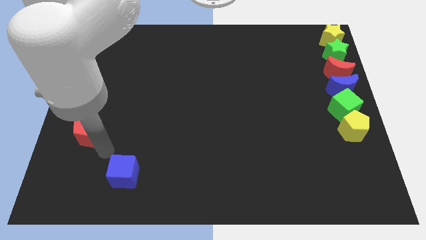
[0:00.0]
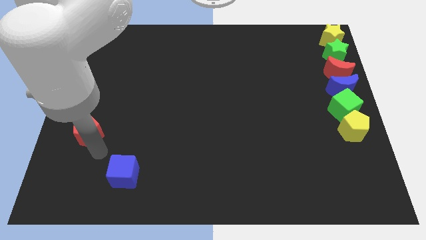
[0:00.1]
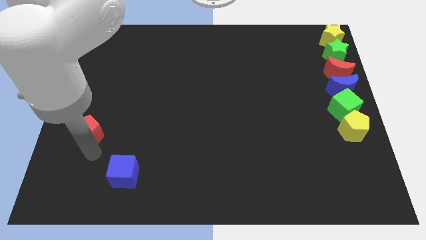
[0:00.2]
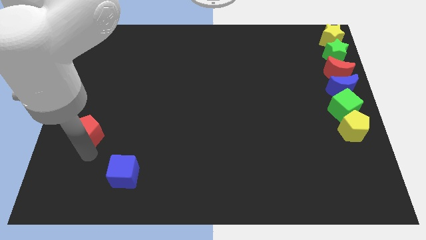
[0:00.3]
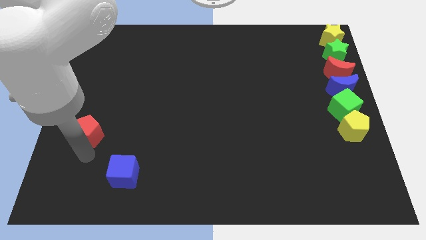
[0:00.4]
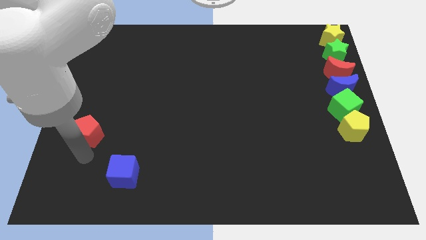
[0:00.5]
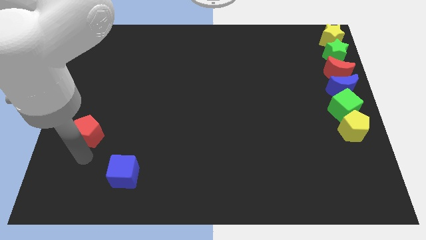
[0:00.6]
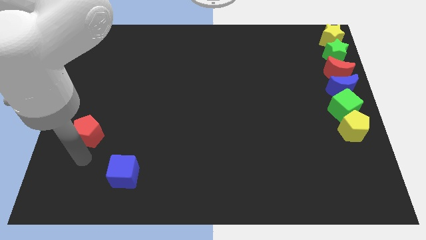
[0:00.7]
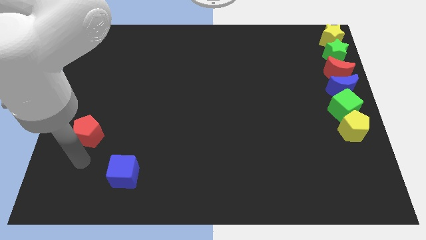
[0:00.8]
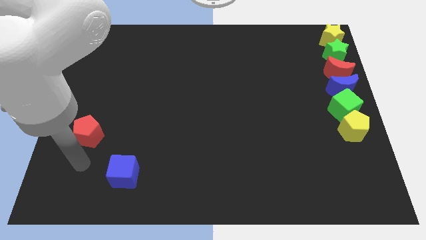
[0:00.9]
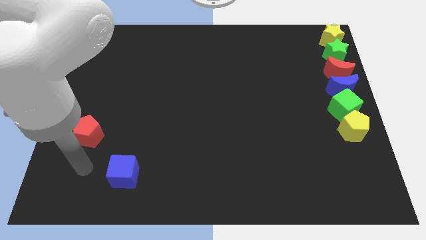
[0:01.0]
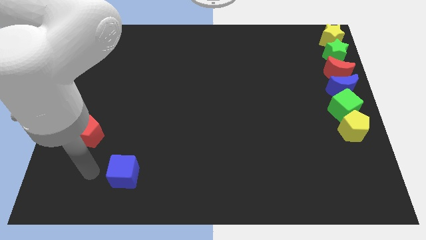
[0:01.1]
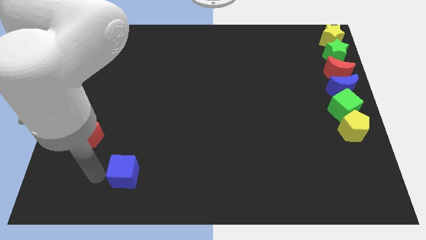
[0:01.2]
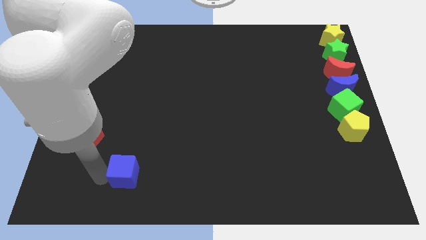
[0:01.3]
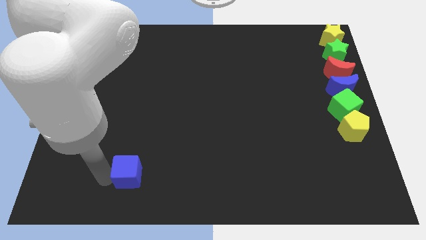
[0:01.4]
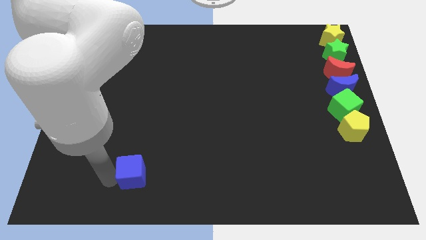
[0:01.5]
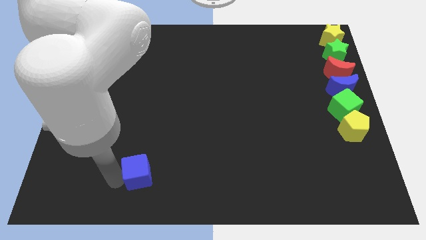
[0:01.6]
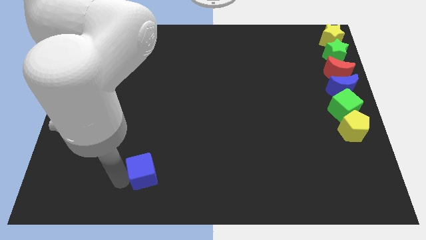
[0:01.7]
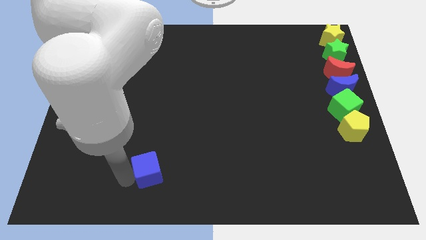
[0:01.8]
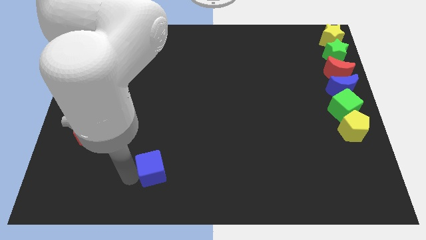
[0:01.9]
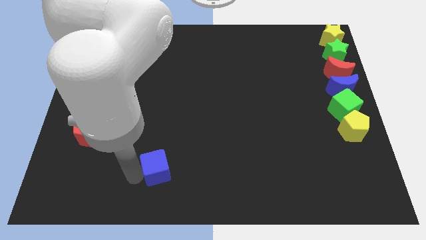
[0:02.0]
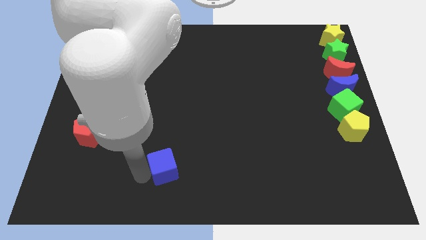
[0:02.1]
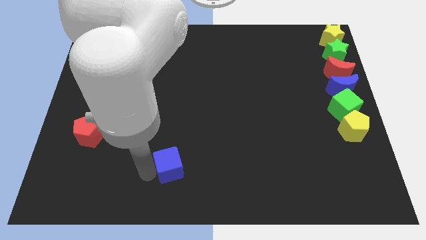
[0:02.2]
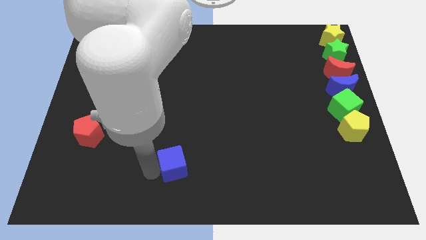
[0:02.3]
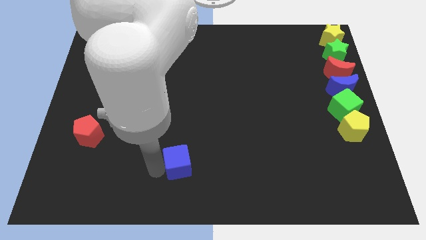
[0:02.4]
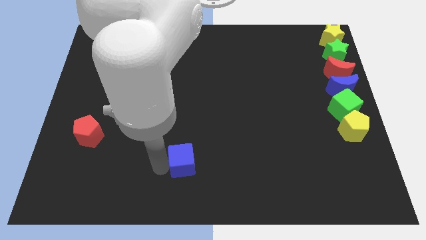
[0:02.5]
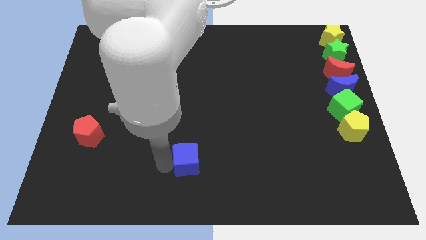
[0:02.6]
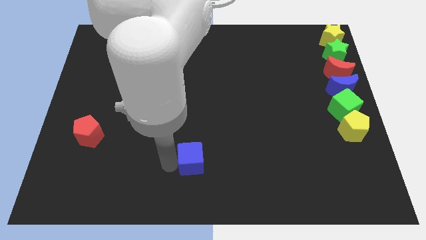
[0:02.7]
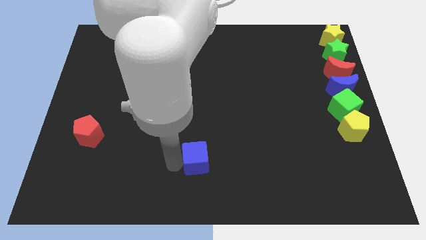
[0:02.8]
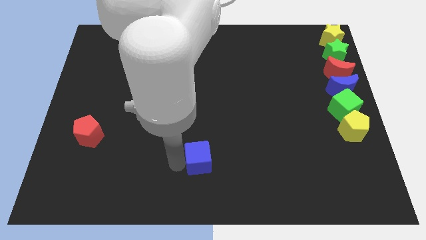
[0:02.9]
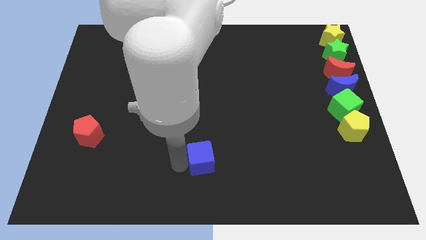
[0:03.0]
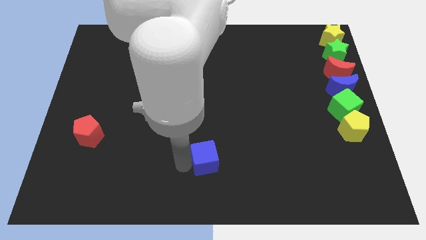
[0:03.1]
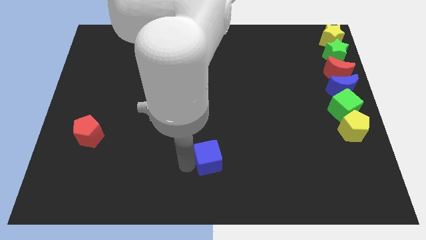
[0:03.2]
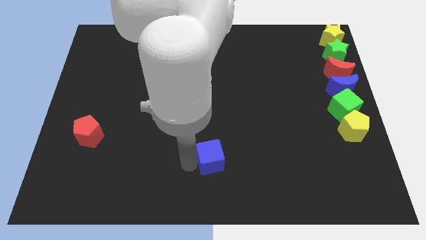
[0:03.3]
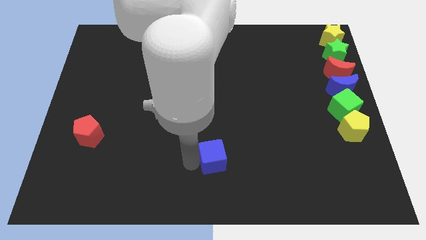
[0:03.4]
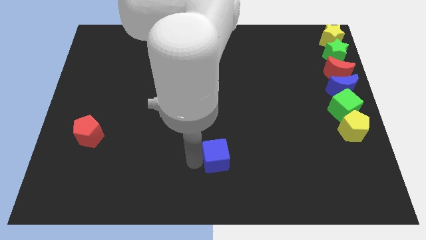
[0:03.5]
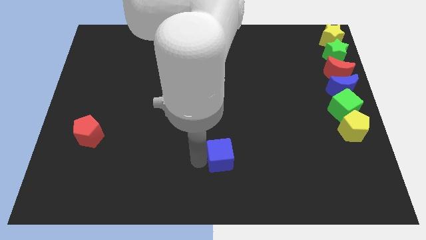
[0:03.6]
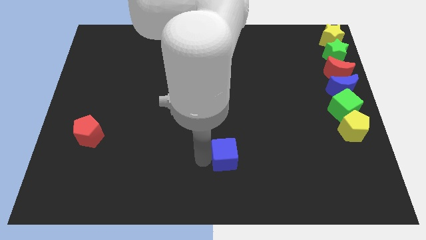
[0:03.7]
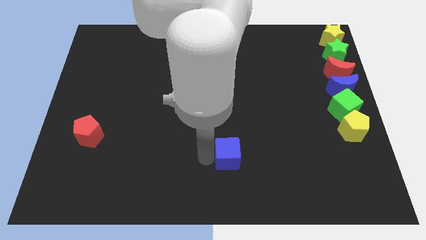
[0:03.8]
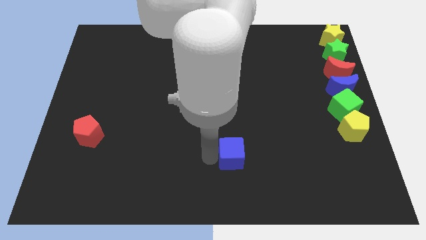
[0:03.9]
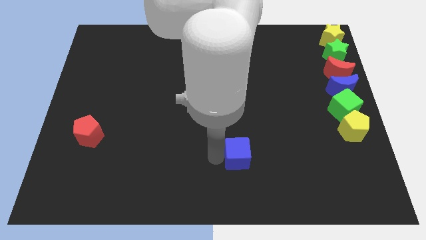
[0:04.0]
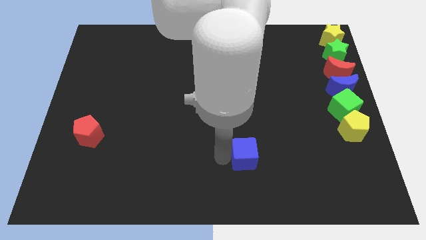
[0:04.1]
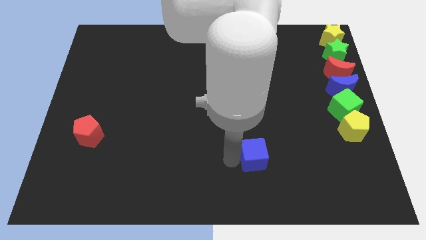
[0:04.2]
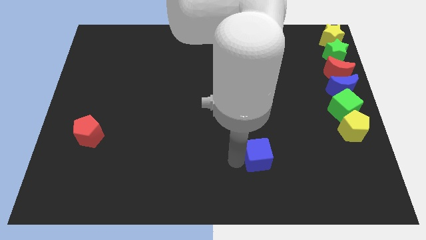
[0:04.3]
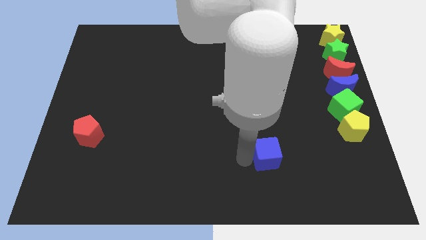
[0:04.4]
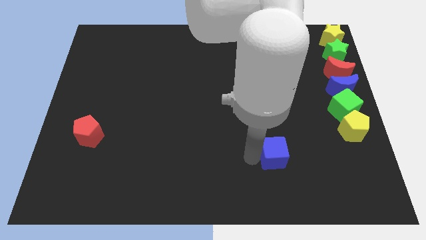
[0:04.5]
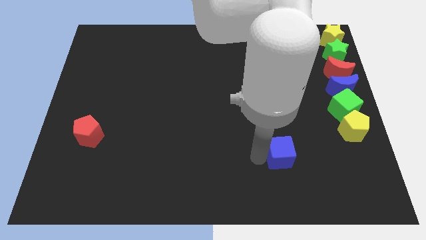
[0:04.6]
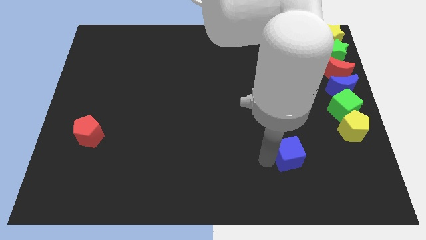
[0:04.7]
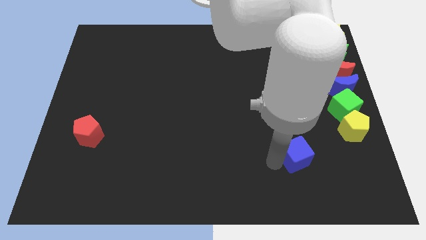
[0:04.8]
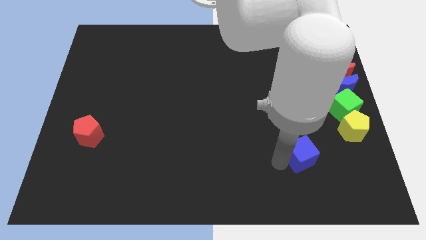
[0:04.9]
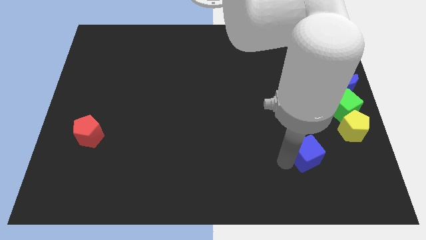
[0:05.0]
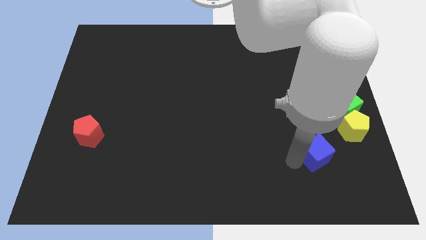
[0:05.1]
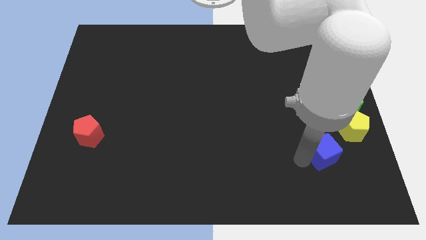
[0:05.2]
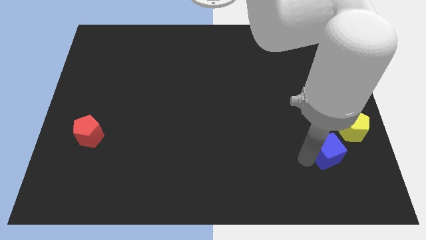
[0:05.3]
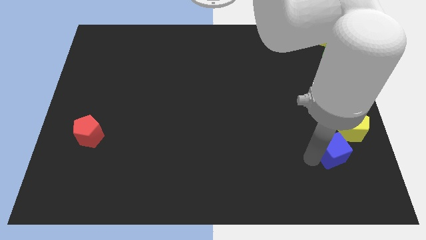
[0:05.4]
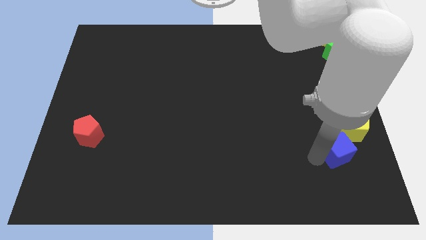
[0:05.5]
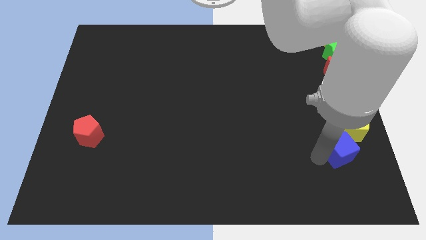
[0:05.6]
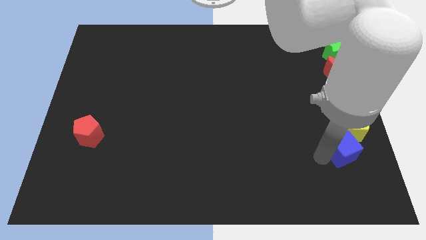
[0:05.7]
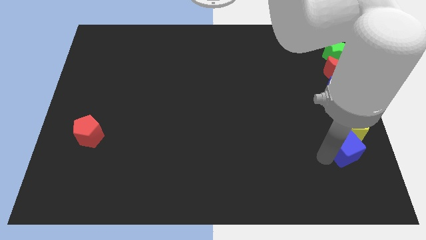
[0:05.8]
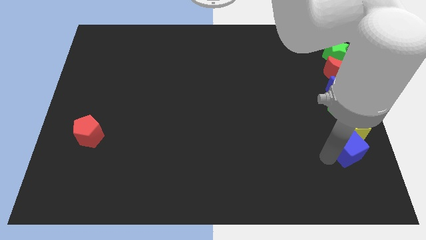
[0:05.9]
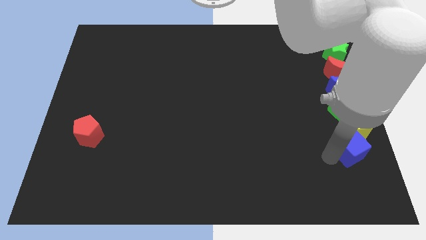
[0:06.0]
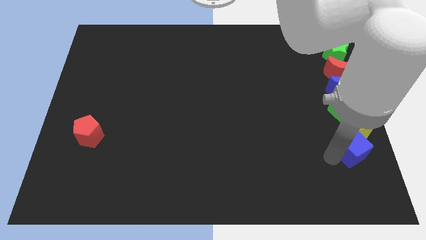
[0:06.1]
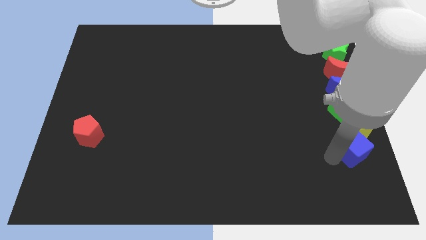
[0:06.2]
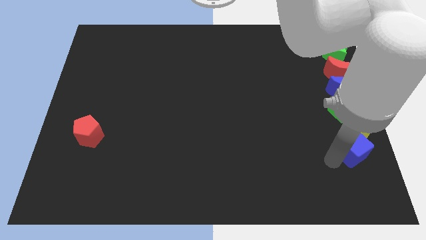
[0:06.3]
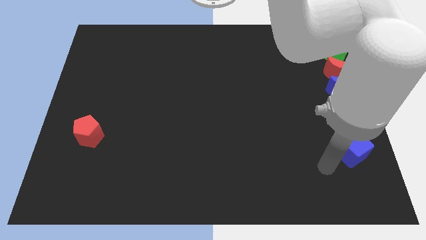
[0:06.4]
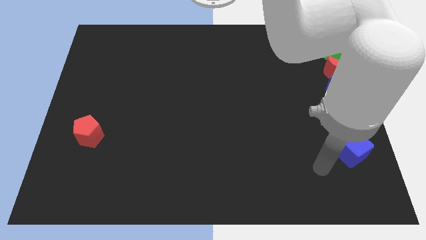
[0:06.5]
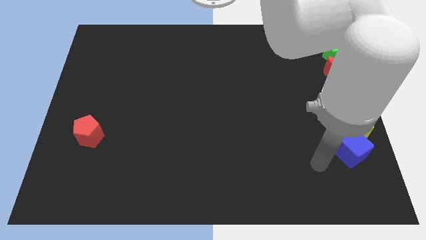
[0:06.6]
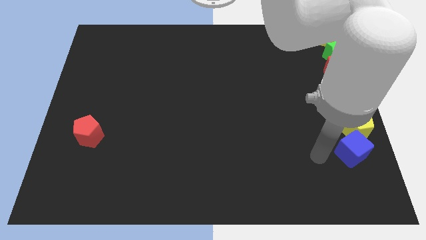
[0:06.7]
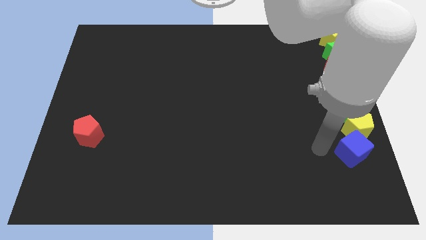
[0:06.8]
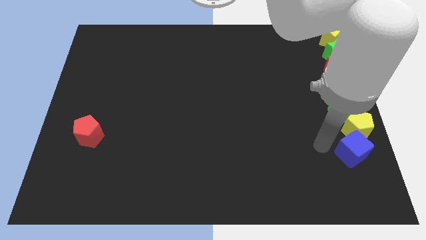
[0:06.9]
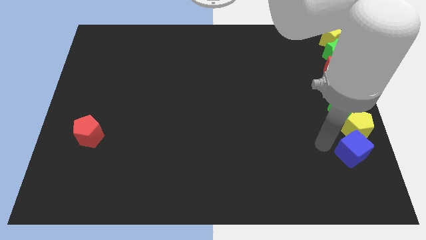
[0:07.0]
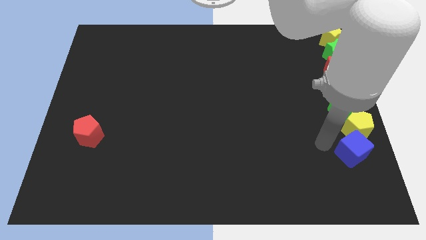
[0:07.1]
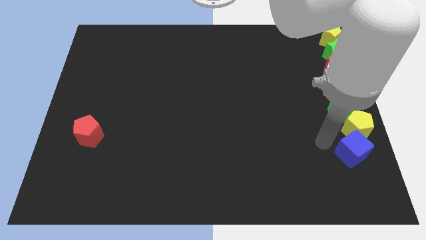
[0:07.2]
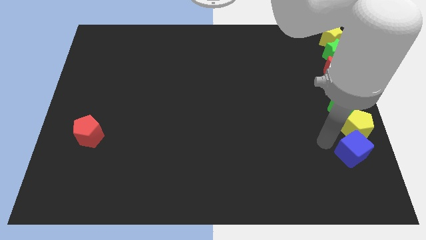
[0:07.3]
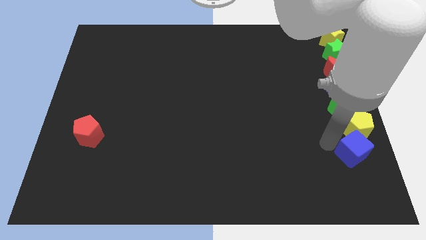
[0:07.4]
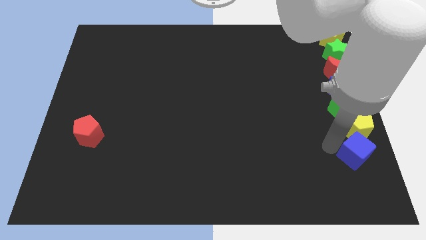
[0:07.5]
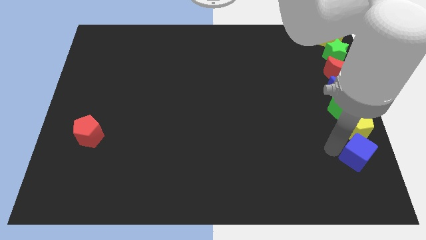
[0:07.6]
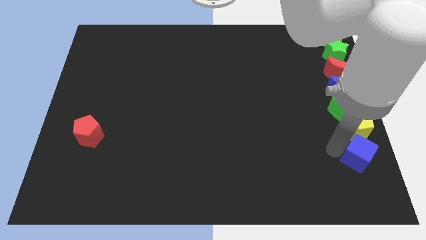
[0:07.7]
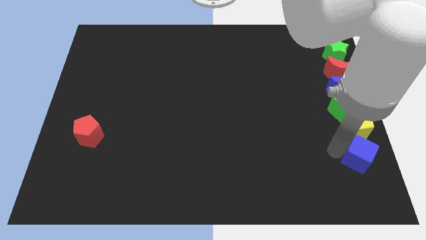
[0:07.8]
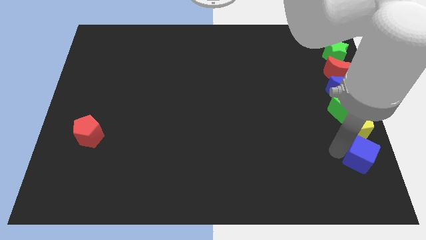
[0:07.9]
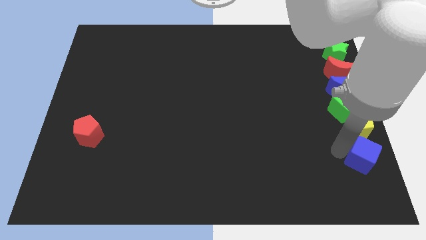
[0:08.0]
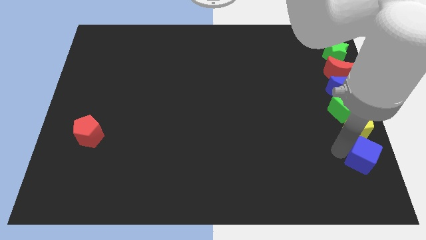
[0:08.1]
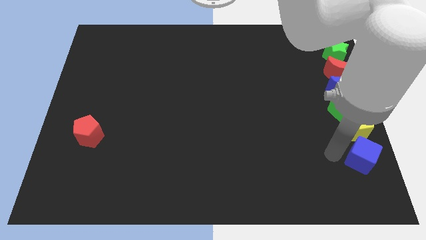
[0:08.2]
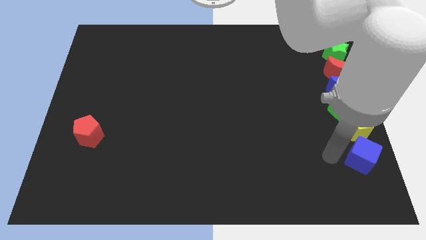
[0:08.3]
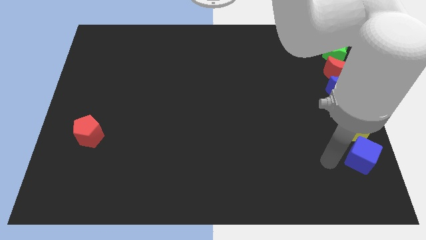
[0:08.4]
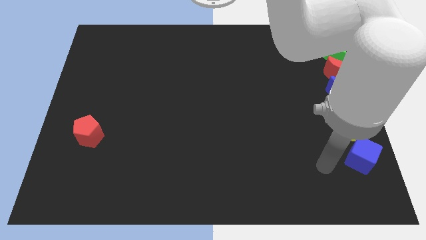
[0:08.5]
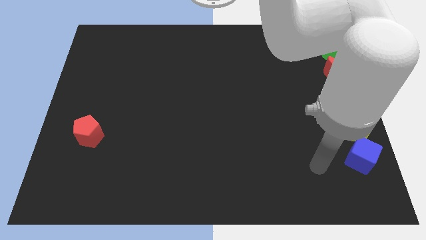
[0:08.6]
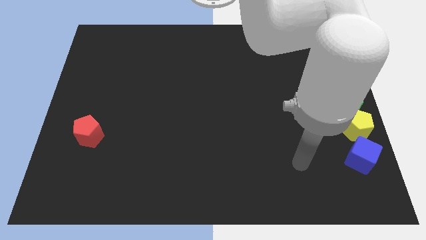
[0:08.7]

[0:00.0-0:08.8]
place the blue cube towards the bottom of the yellow pentagon

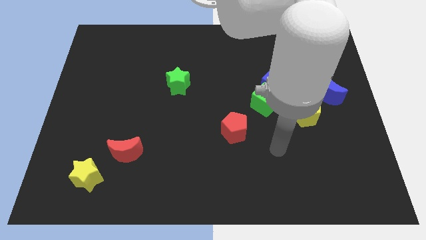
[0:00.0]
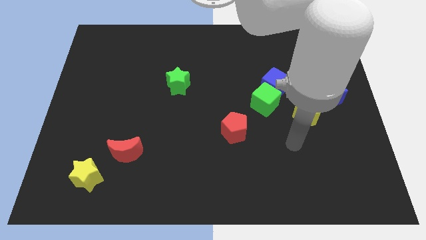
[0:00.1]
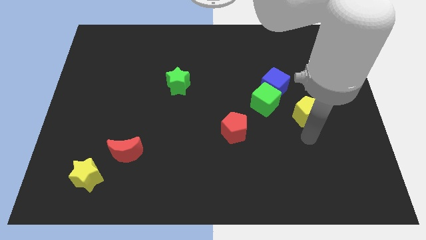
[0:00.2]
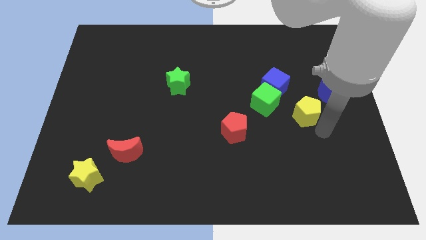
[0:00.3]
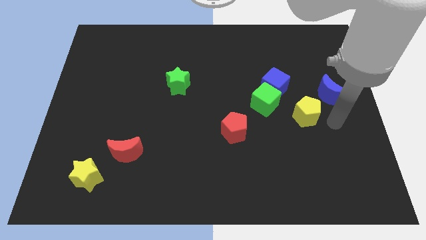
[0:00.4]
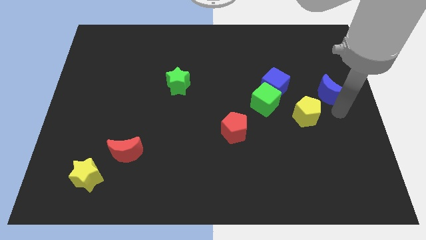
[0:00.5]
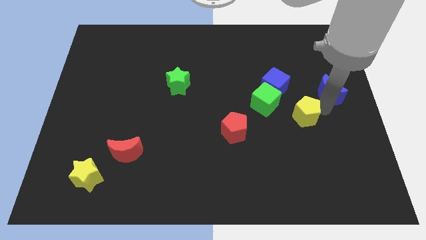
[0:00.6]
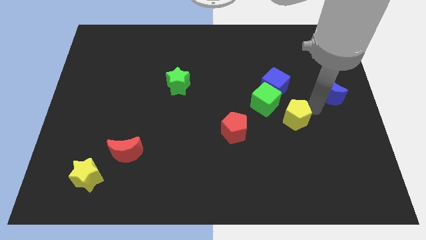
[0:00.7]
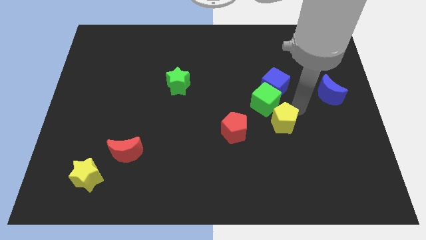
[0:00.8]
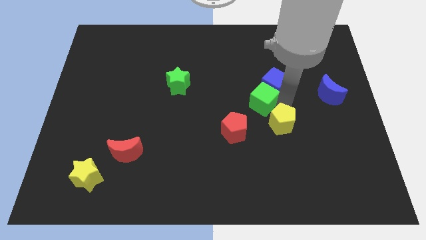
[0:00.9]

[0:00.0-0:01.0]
separate yellow pentagon from blue moon
